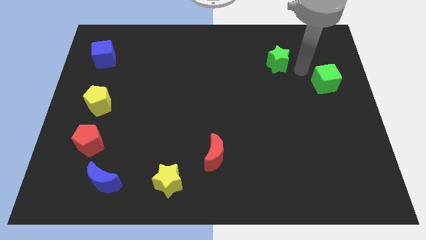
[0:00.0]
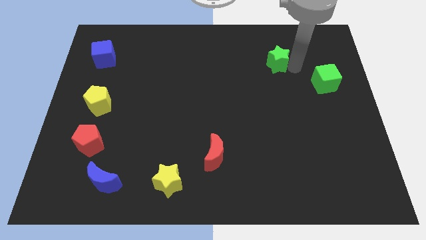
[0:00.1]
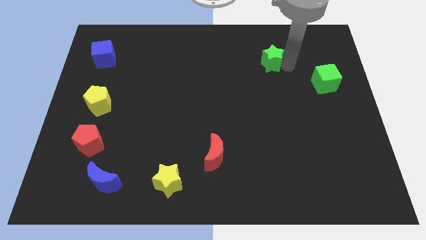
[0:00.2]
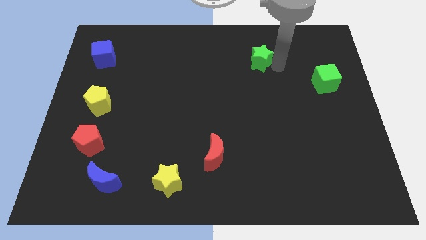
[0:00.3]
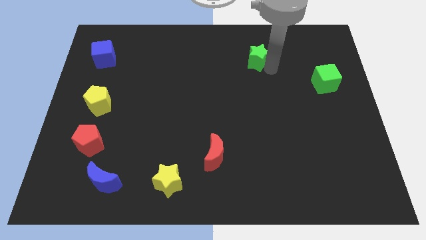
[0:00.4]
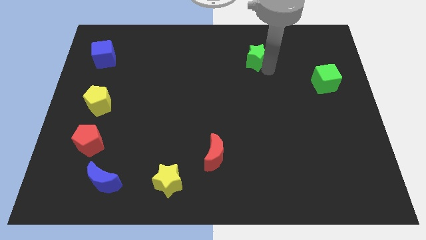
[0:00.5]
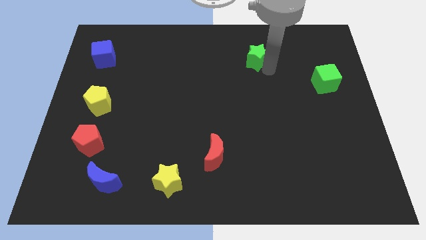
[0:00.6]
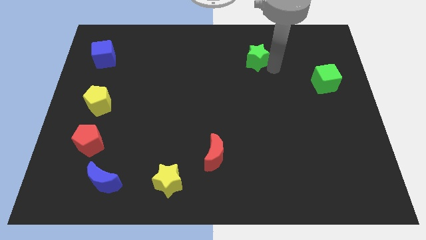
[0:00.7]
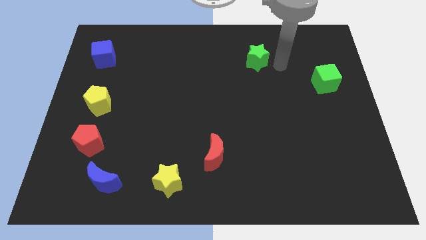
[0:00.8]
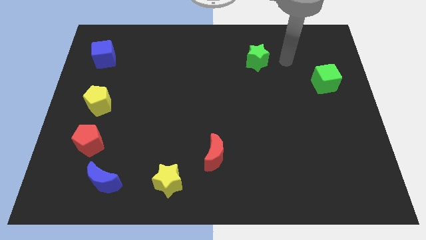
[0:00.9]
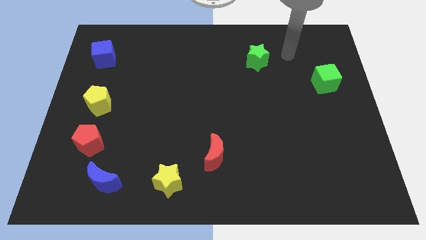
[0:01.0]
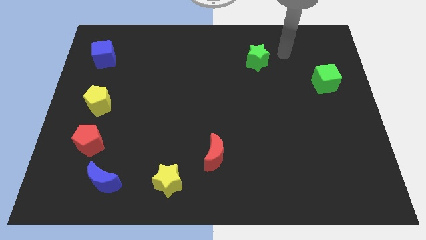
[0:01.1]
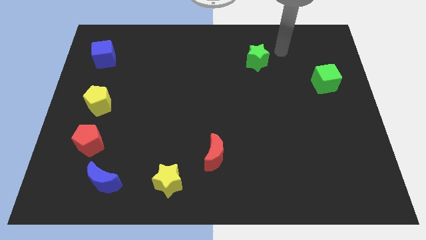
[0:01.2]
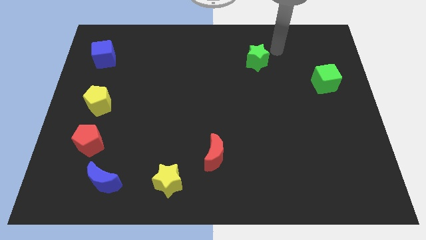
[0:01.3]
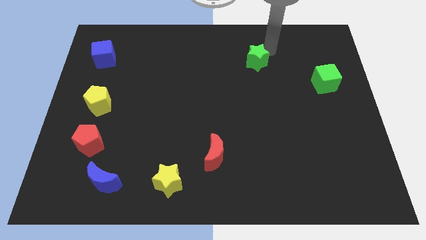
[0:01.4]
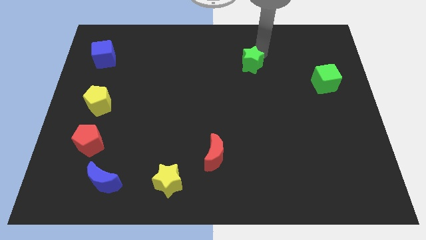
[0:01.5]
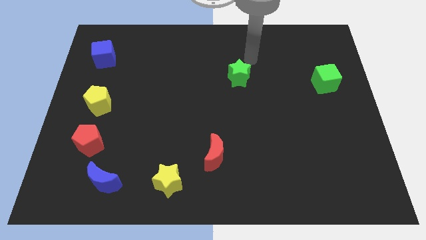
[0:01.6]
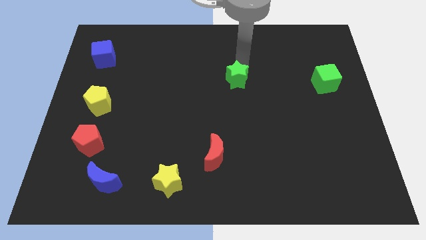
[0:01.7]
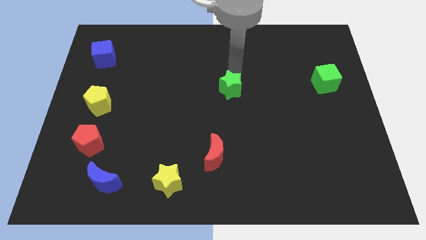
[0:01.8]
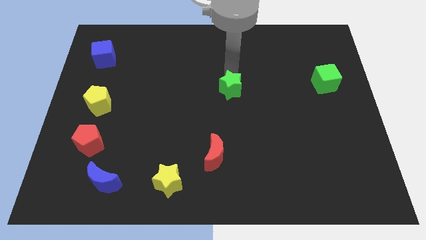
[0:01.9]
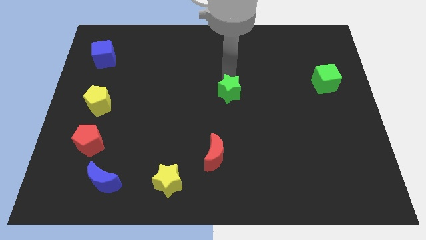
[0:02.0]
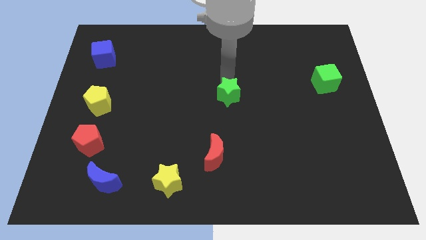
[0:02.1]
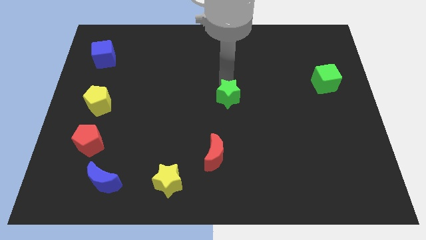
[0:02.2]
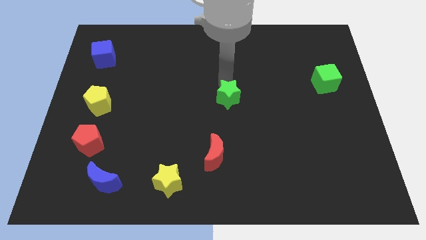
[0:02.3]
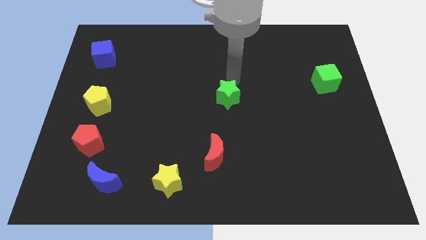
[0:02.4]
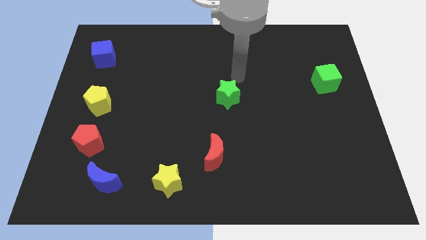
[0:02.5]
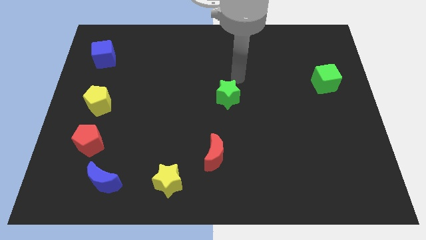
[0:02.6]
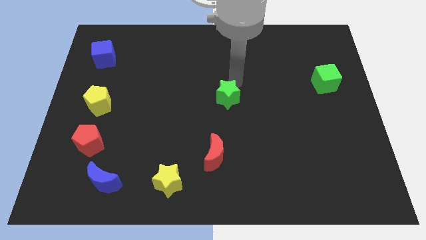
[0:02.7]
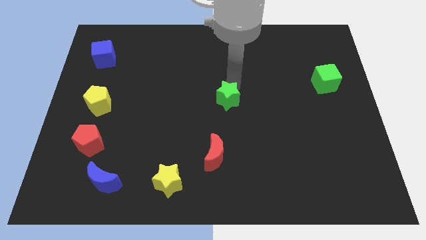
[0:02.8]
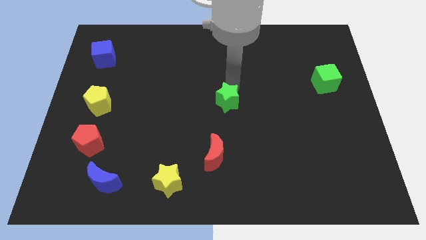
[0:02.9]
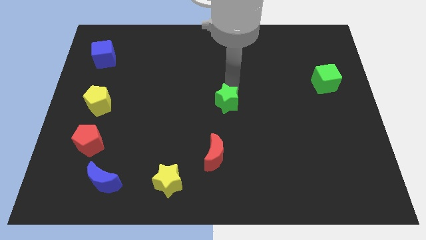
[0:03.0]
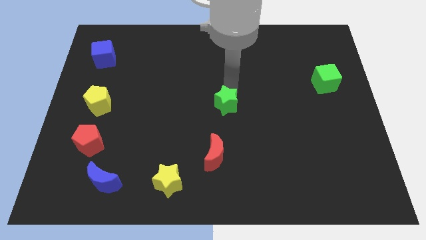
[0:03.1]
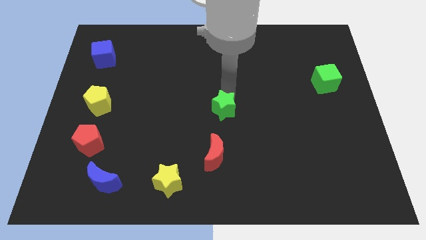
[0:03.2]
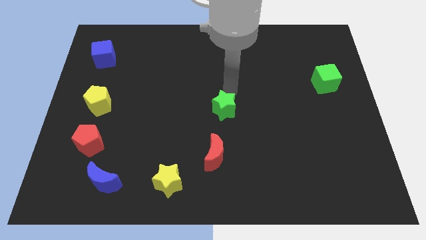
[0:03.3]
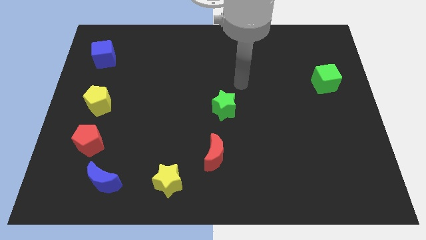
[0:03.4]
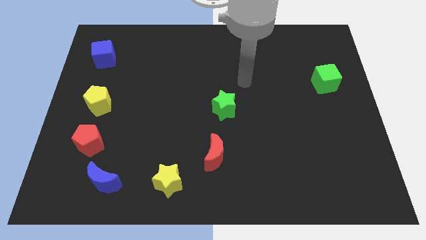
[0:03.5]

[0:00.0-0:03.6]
push the green star towards the center of the board

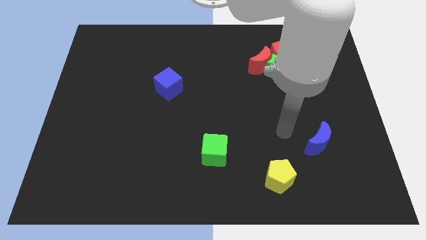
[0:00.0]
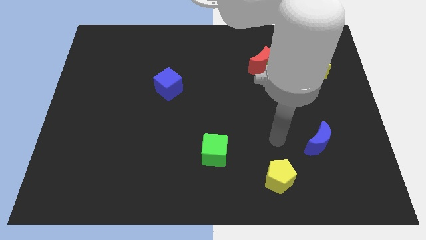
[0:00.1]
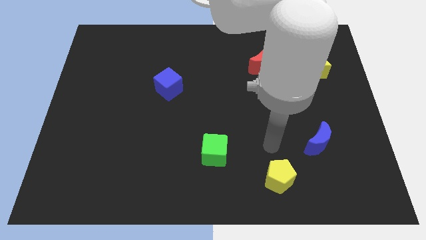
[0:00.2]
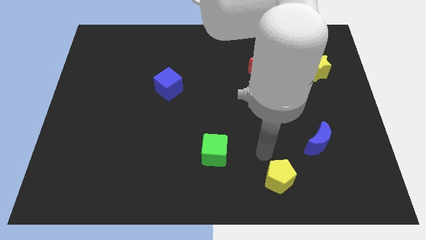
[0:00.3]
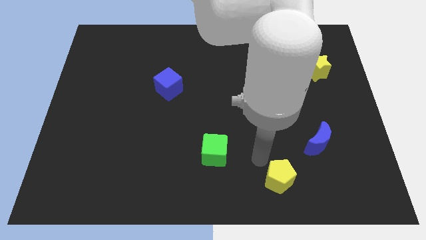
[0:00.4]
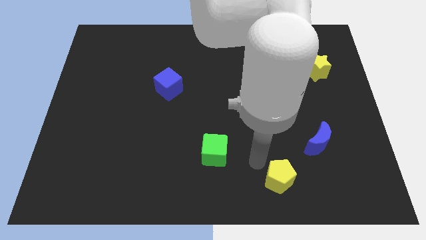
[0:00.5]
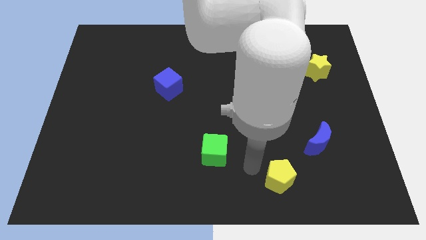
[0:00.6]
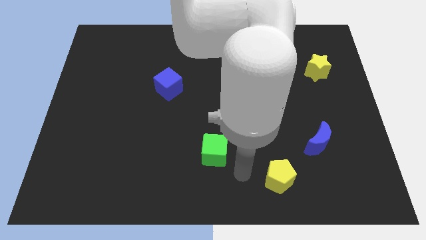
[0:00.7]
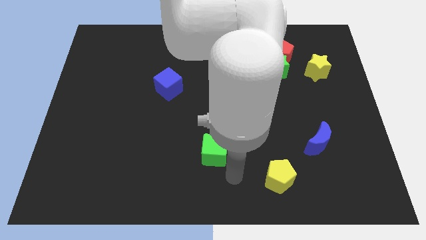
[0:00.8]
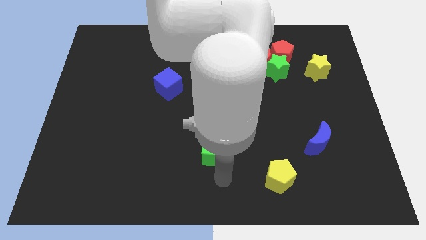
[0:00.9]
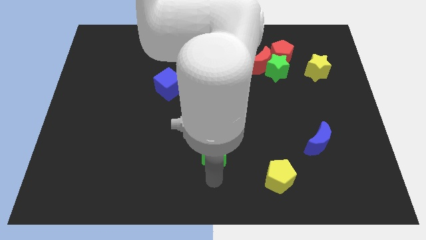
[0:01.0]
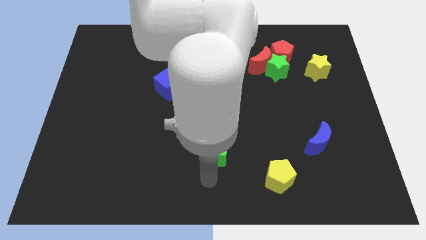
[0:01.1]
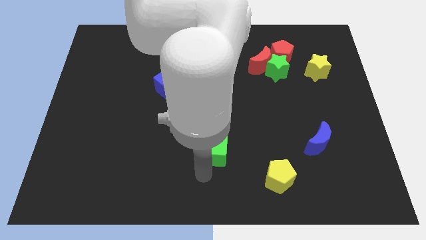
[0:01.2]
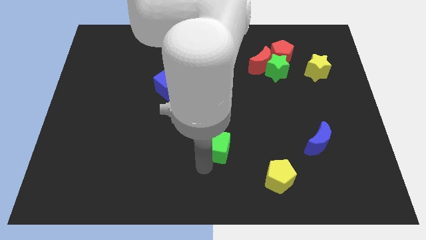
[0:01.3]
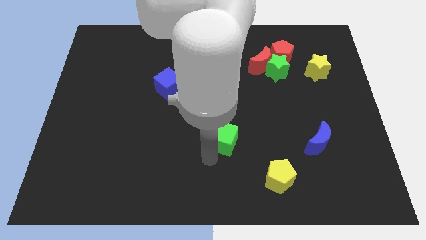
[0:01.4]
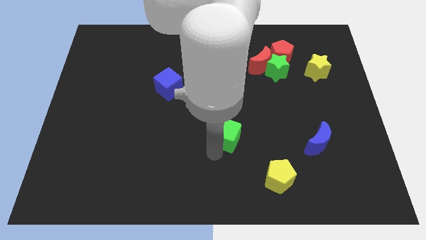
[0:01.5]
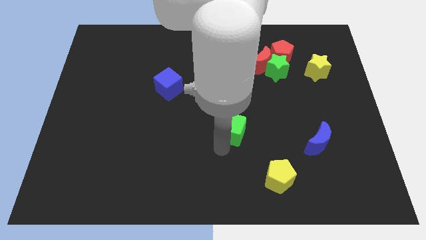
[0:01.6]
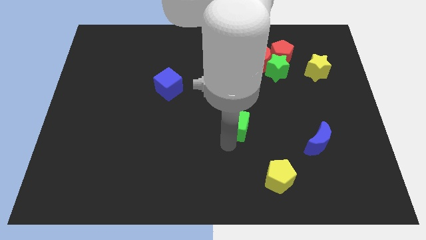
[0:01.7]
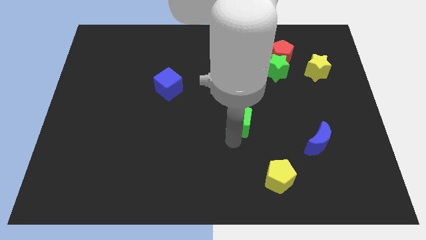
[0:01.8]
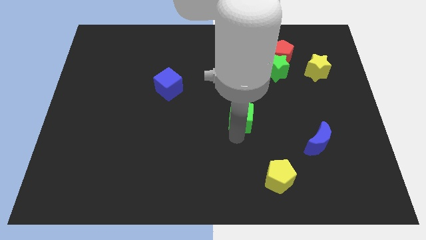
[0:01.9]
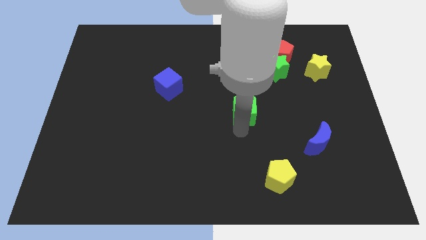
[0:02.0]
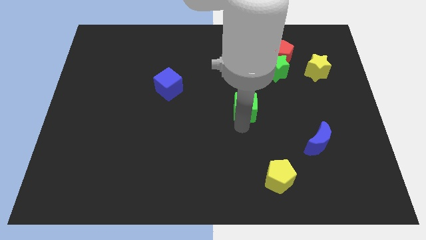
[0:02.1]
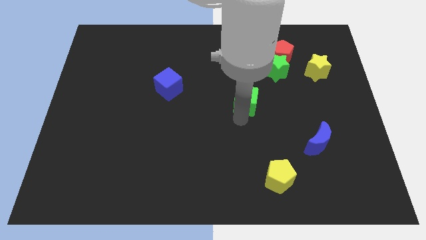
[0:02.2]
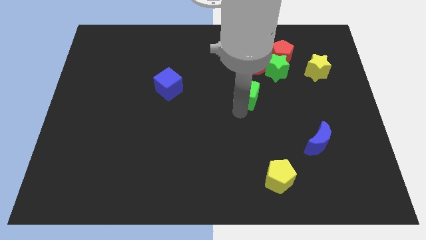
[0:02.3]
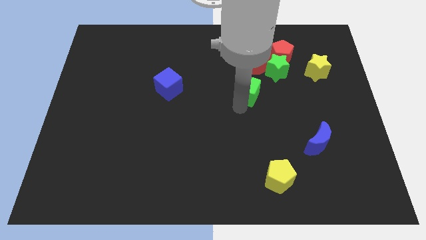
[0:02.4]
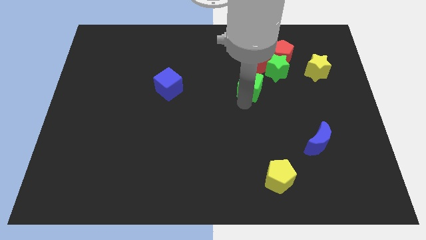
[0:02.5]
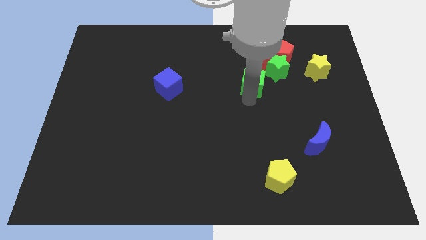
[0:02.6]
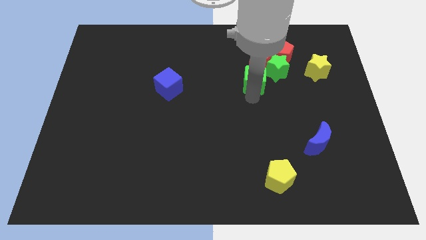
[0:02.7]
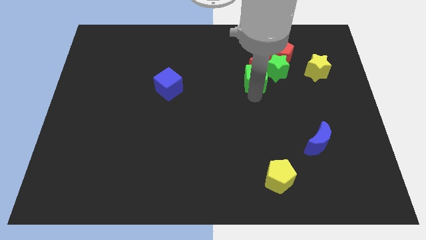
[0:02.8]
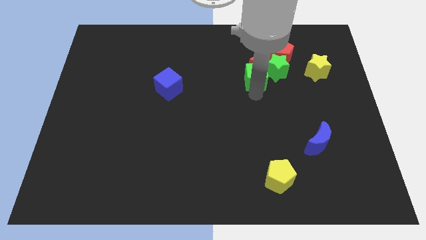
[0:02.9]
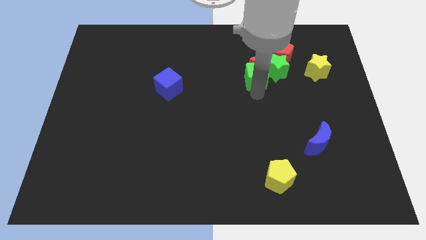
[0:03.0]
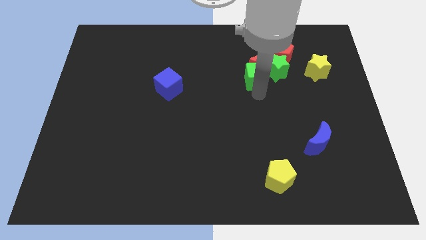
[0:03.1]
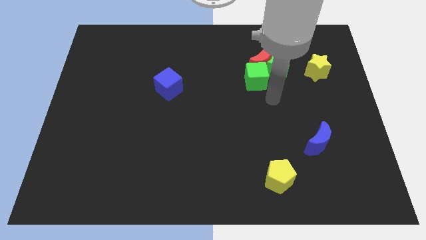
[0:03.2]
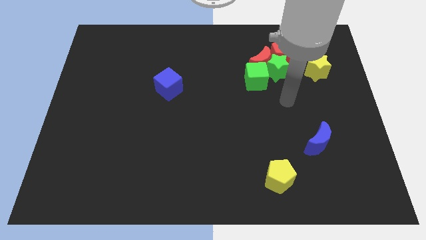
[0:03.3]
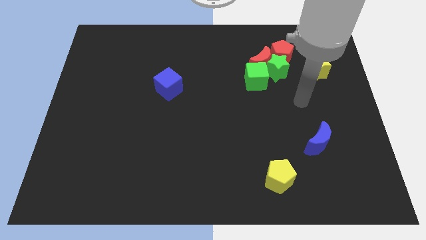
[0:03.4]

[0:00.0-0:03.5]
push green cube into the red moon

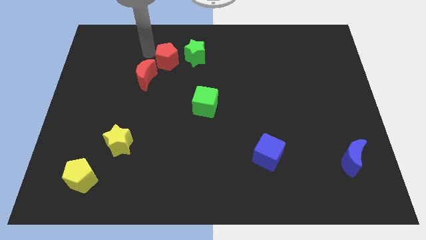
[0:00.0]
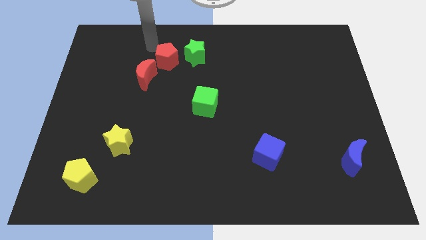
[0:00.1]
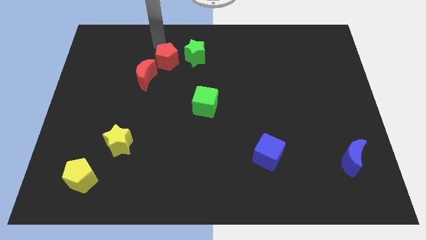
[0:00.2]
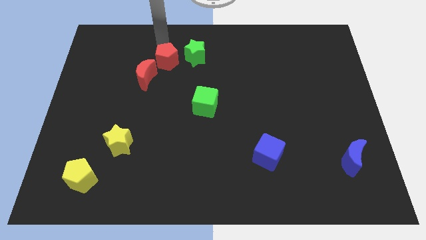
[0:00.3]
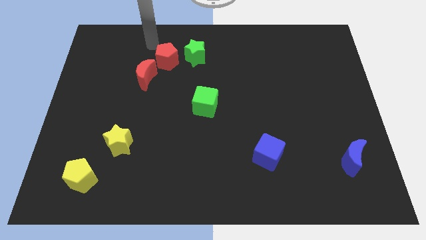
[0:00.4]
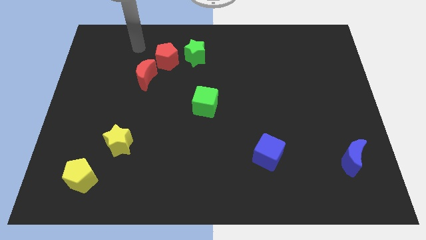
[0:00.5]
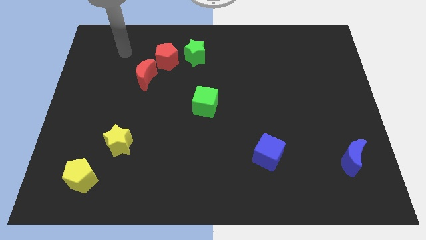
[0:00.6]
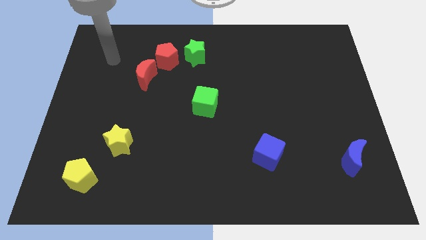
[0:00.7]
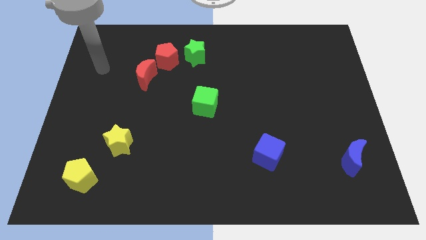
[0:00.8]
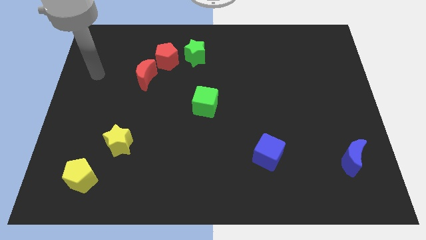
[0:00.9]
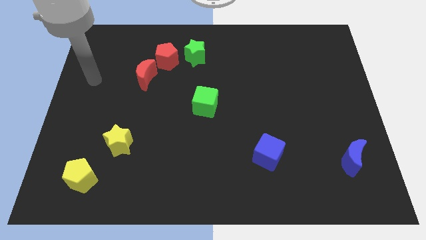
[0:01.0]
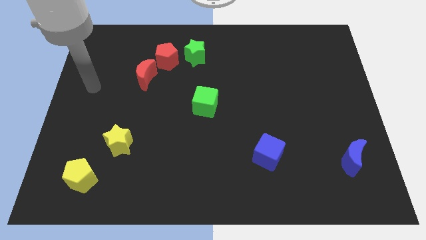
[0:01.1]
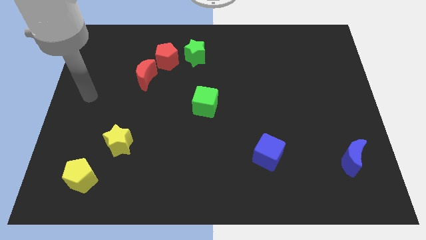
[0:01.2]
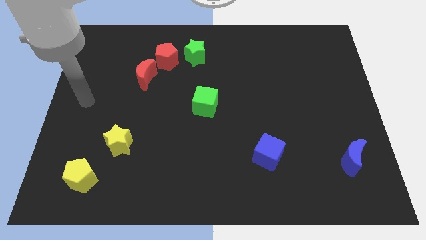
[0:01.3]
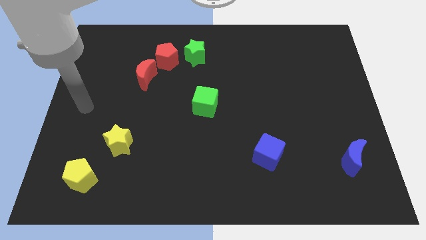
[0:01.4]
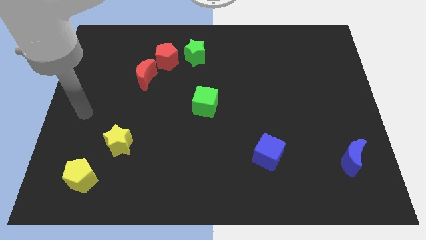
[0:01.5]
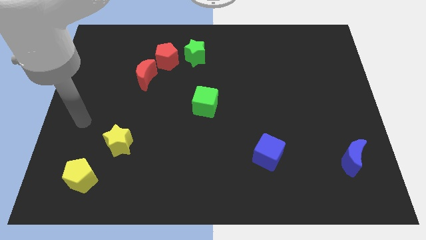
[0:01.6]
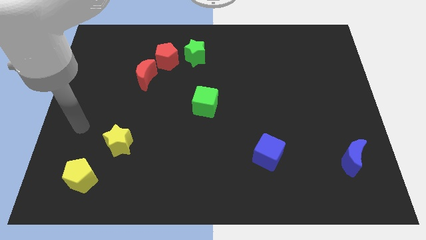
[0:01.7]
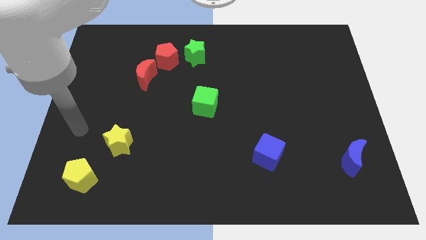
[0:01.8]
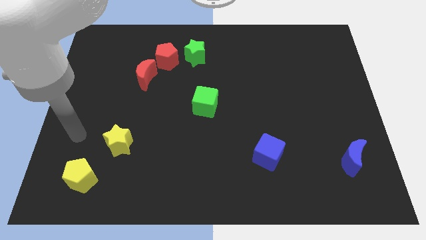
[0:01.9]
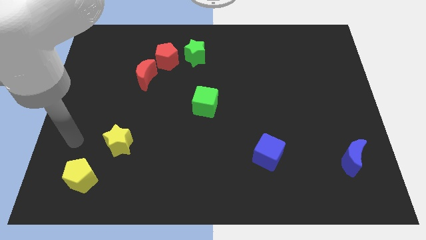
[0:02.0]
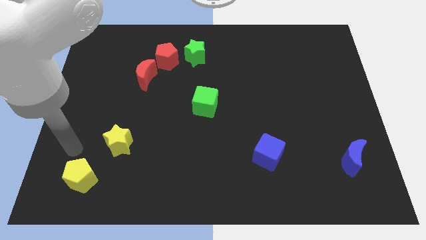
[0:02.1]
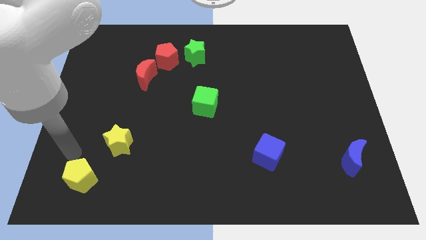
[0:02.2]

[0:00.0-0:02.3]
move your arm and point on top of yellow pentagon
